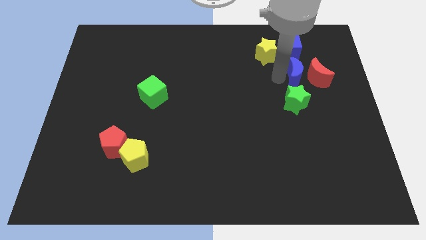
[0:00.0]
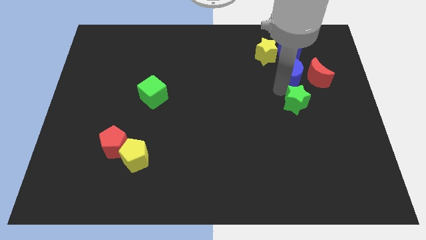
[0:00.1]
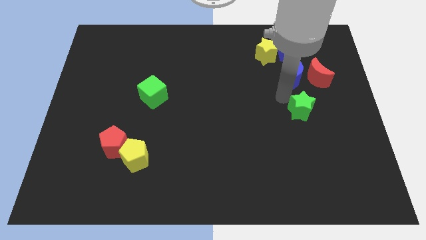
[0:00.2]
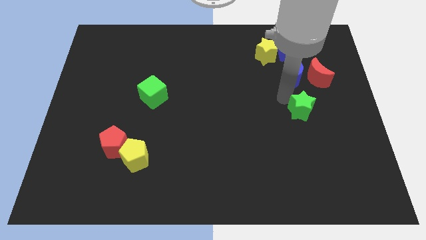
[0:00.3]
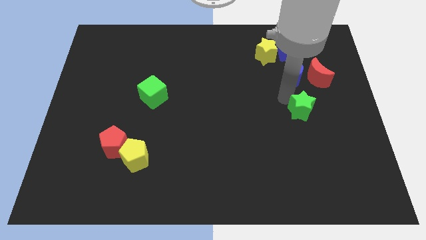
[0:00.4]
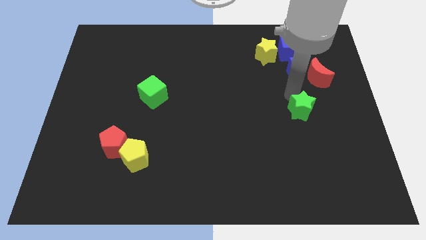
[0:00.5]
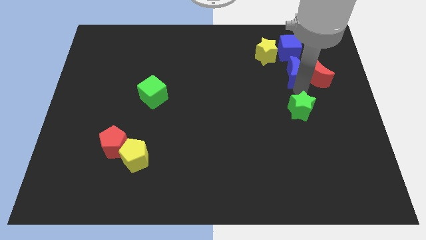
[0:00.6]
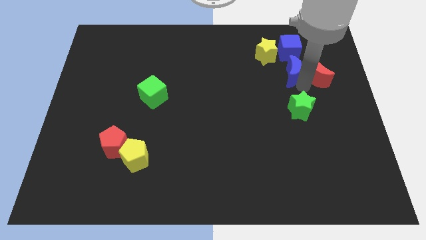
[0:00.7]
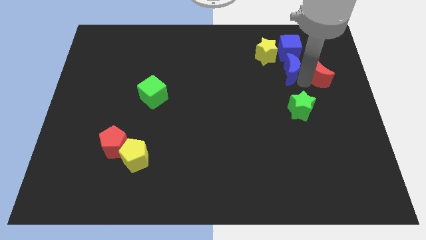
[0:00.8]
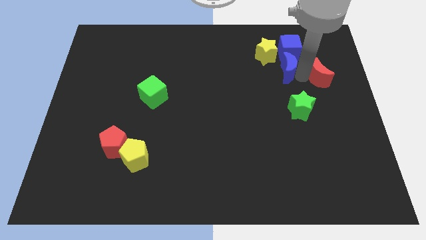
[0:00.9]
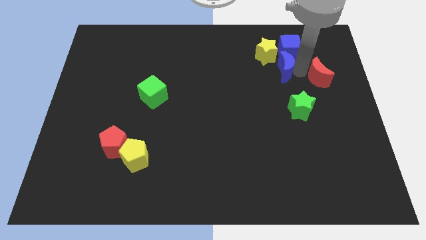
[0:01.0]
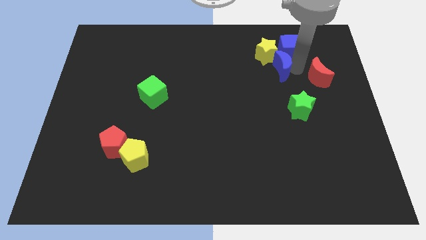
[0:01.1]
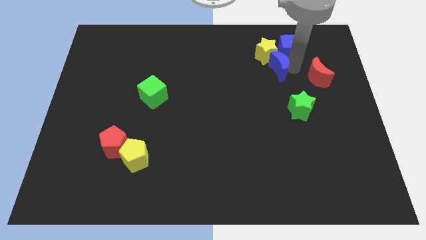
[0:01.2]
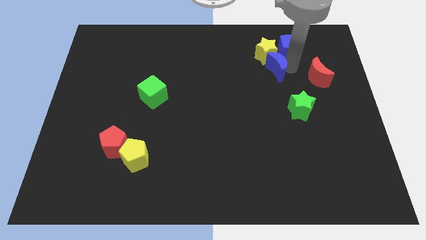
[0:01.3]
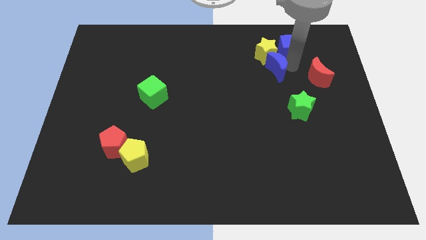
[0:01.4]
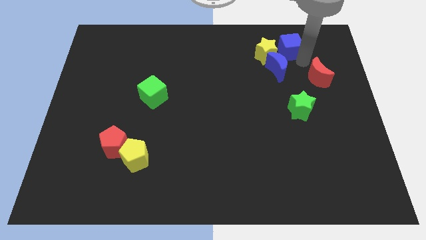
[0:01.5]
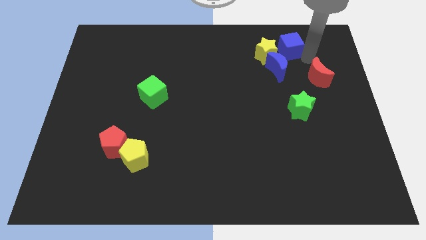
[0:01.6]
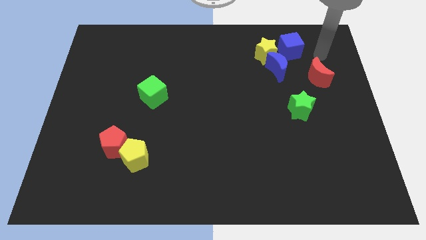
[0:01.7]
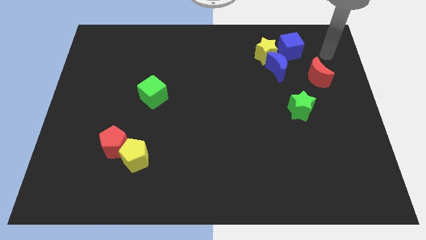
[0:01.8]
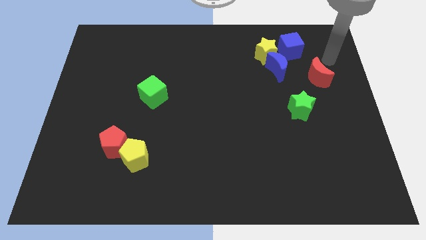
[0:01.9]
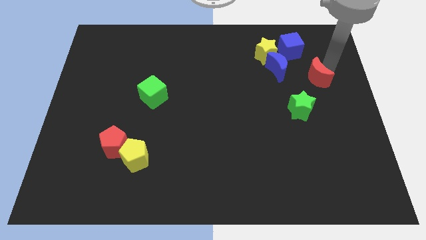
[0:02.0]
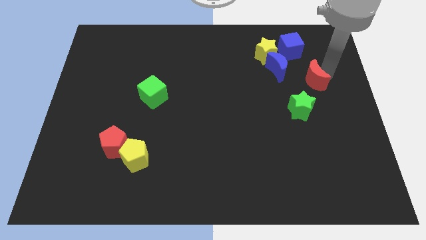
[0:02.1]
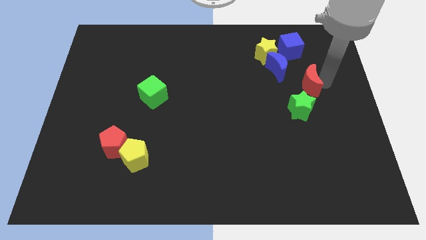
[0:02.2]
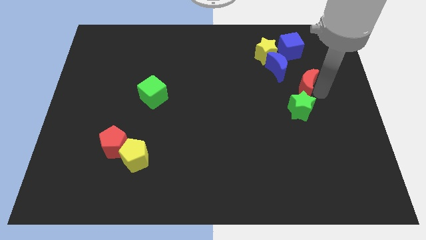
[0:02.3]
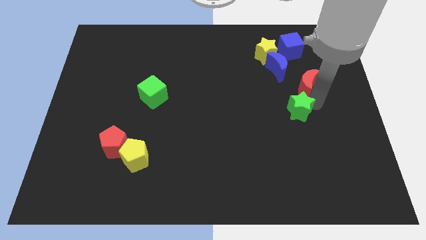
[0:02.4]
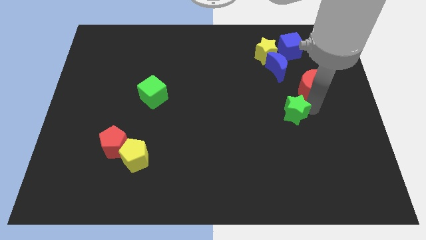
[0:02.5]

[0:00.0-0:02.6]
move your arm into group of blocks

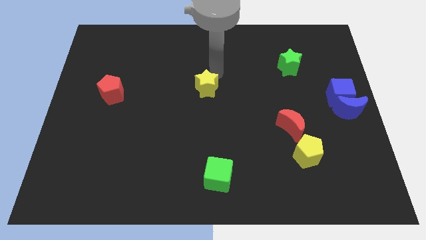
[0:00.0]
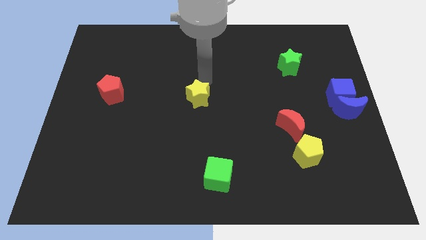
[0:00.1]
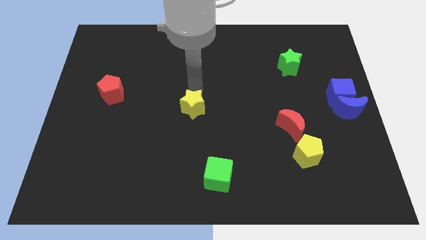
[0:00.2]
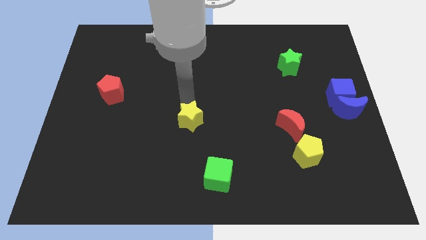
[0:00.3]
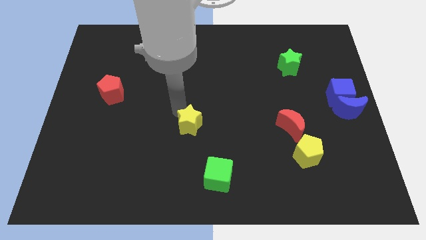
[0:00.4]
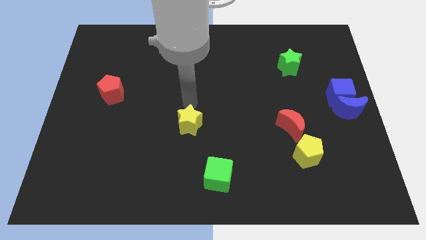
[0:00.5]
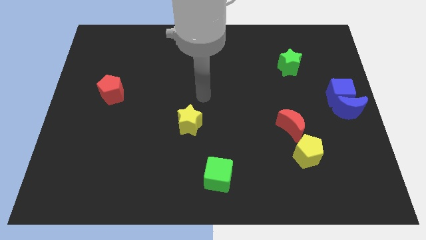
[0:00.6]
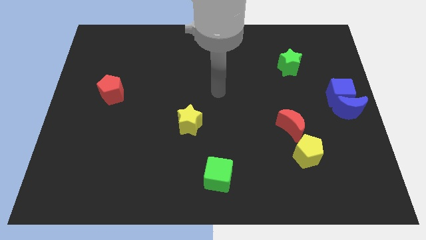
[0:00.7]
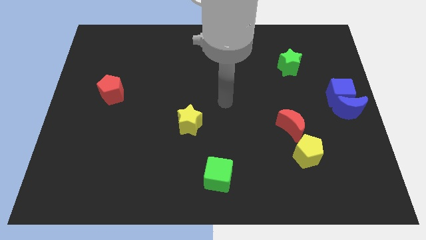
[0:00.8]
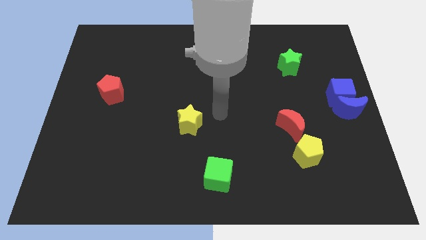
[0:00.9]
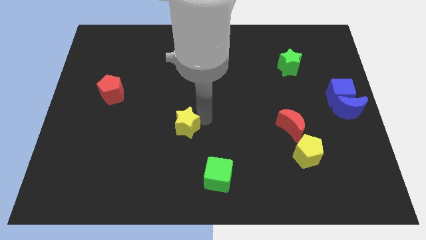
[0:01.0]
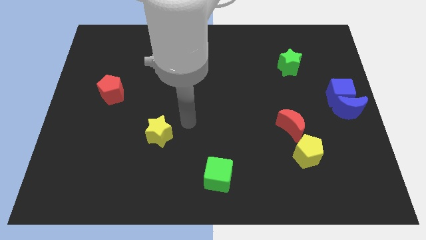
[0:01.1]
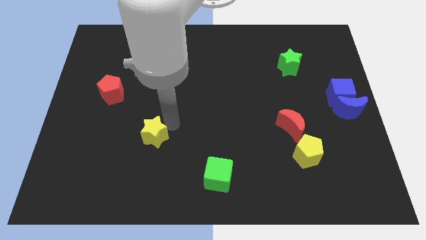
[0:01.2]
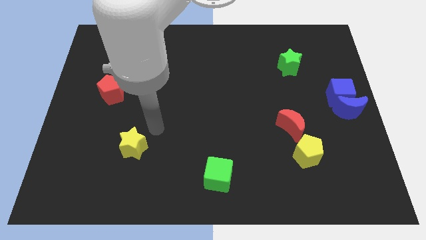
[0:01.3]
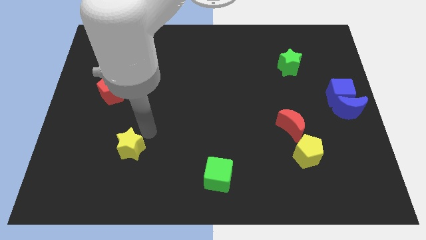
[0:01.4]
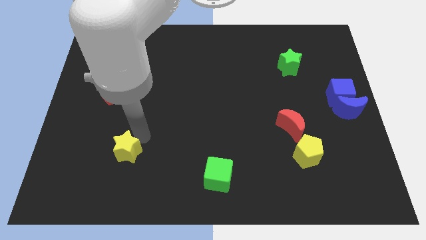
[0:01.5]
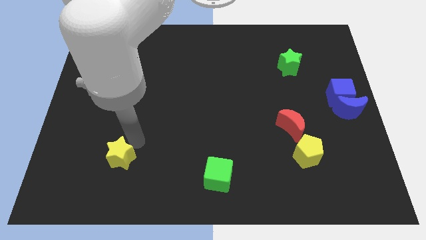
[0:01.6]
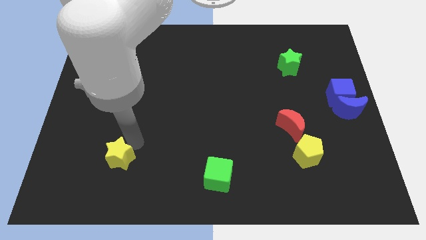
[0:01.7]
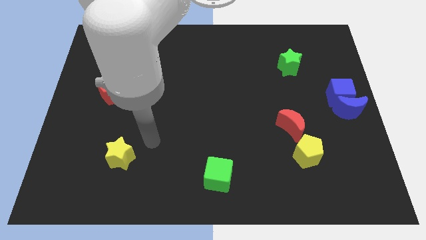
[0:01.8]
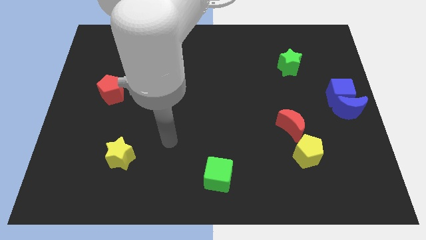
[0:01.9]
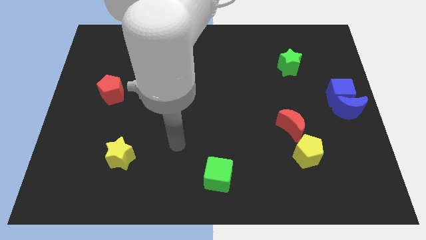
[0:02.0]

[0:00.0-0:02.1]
move yellow star downwards

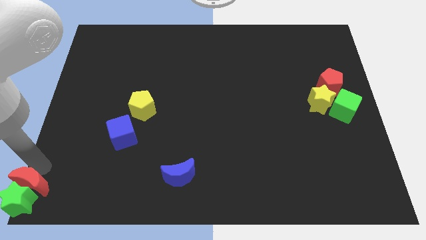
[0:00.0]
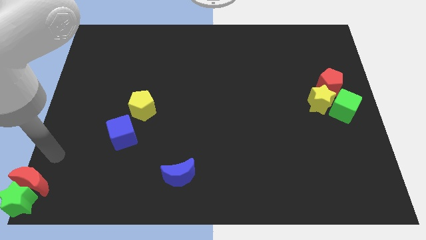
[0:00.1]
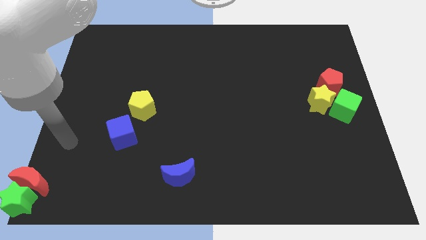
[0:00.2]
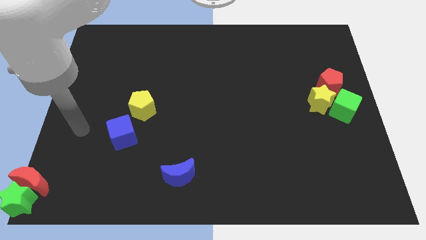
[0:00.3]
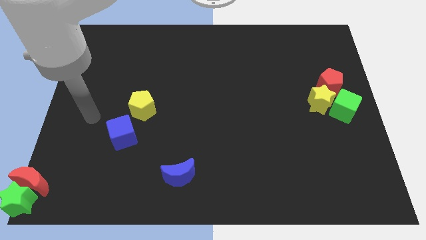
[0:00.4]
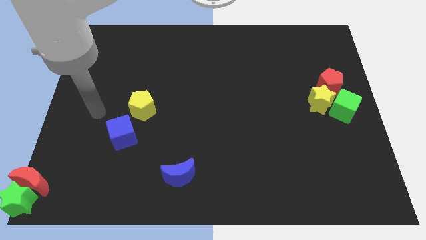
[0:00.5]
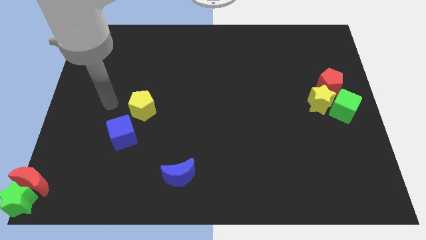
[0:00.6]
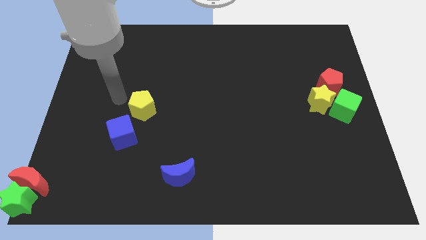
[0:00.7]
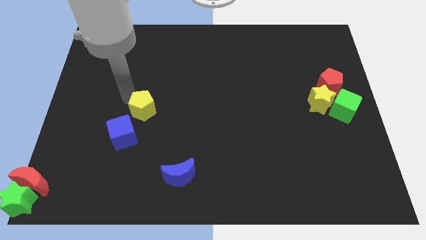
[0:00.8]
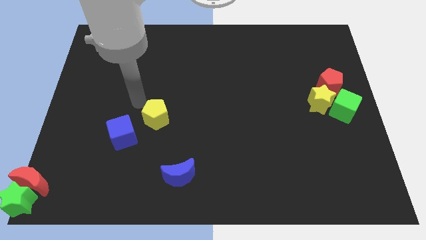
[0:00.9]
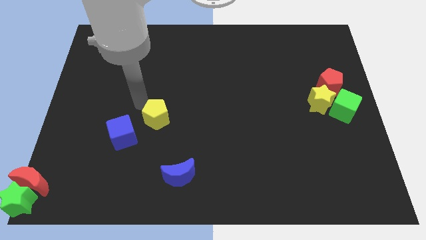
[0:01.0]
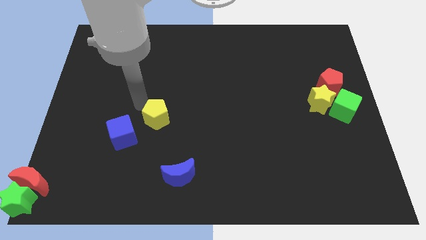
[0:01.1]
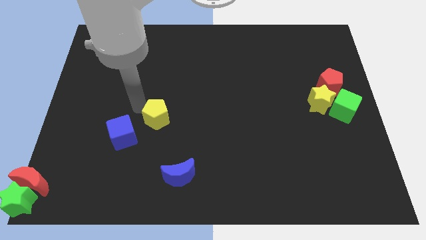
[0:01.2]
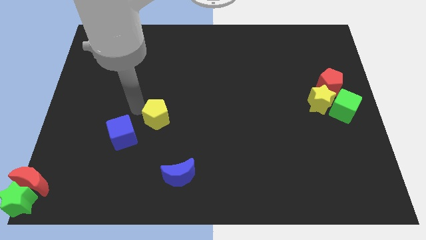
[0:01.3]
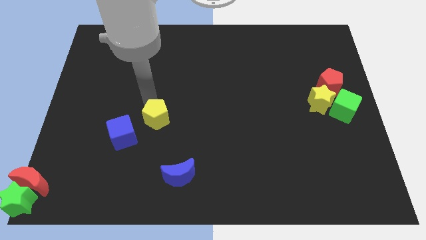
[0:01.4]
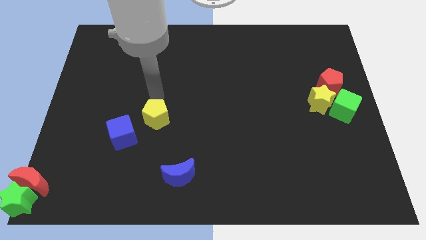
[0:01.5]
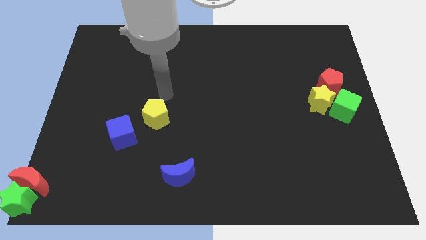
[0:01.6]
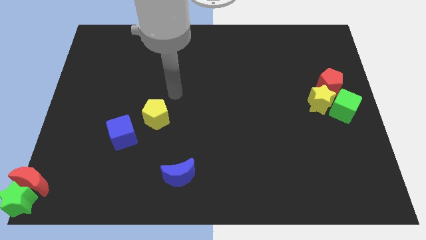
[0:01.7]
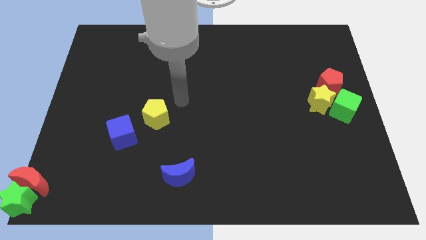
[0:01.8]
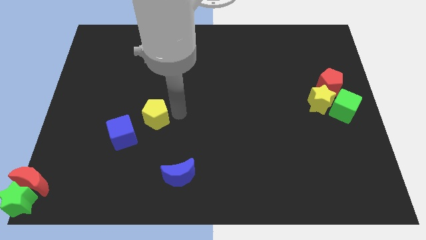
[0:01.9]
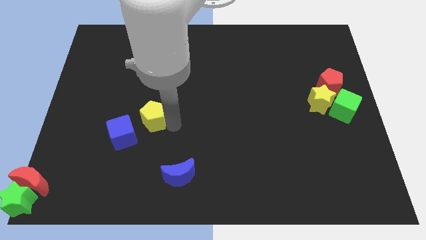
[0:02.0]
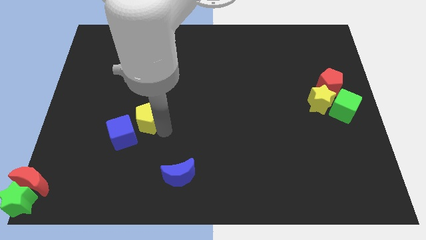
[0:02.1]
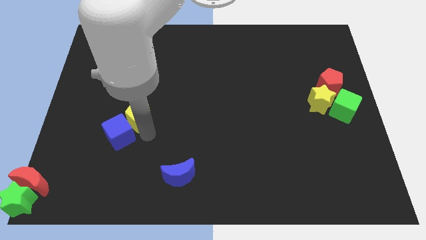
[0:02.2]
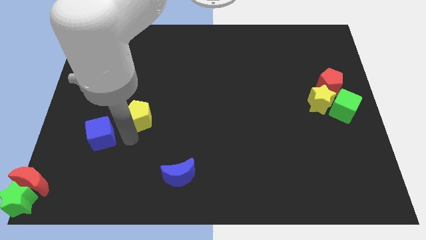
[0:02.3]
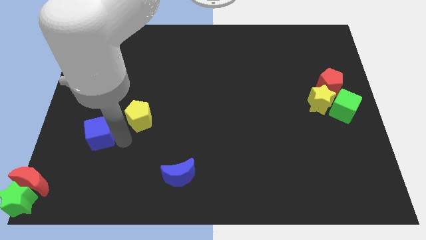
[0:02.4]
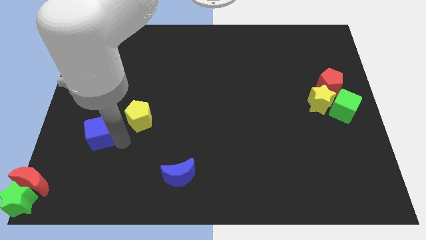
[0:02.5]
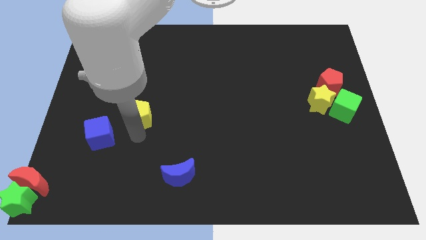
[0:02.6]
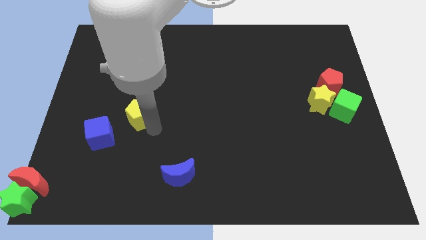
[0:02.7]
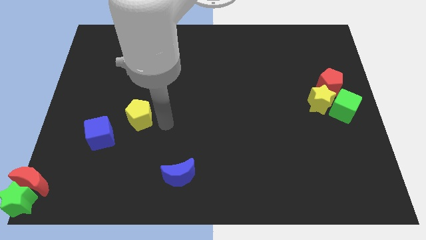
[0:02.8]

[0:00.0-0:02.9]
place the yellow pentagon diagonally to the blue moon

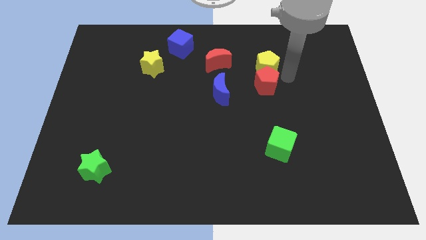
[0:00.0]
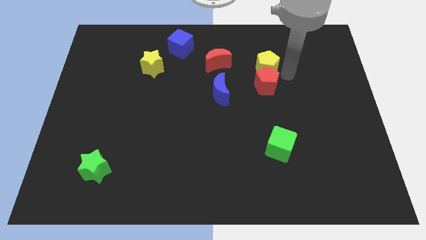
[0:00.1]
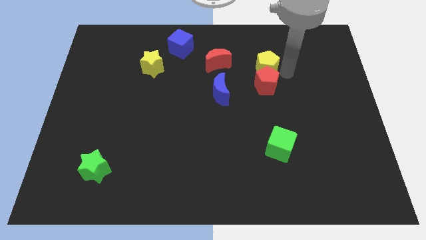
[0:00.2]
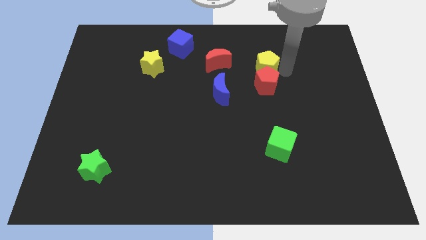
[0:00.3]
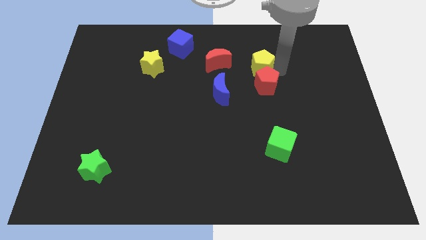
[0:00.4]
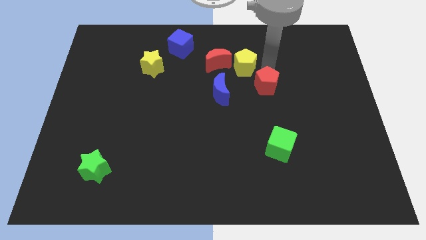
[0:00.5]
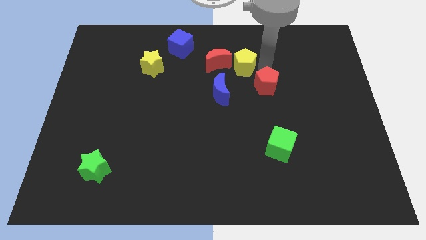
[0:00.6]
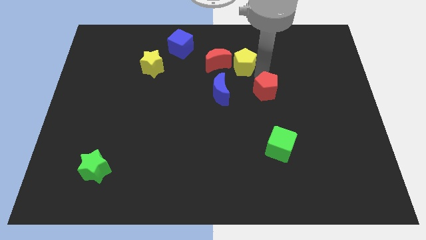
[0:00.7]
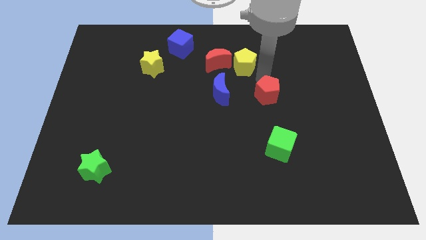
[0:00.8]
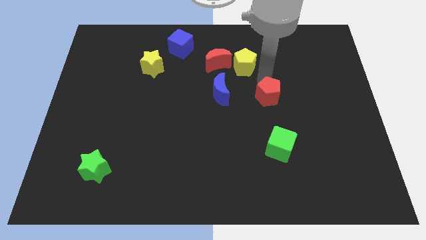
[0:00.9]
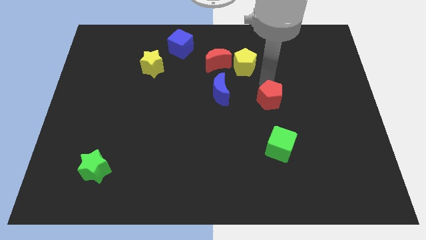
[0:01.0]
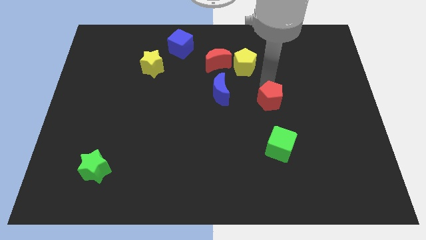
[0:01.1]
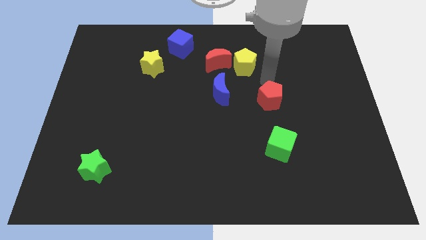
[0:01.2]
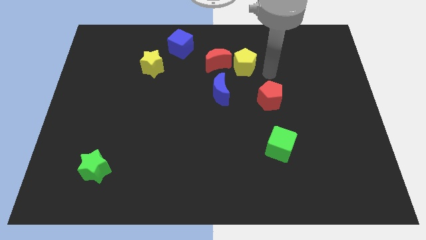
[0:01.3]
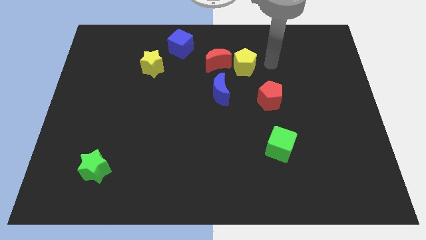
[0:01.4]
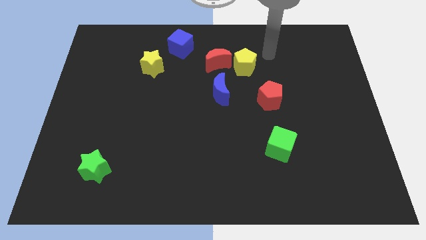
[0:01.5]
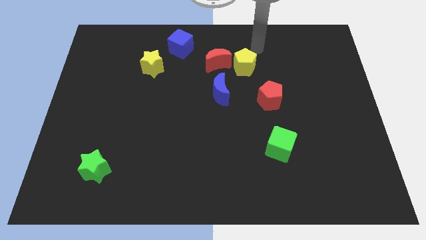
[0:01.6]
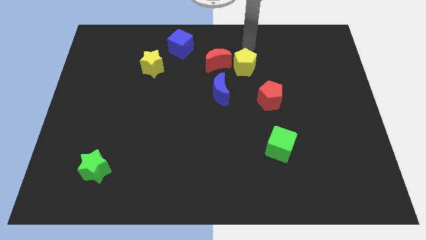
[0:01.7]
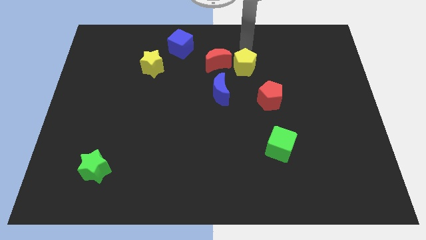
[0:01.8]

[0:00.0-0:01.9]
push the red pentagon away from the yellow pentagon
